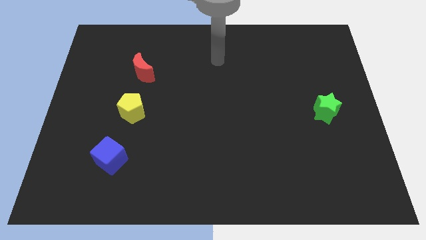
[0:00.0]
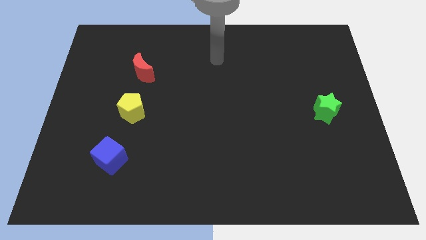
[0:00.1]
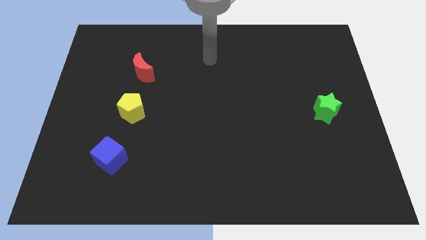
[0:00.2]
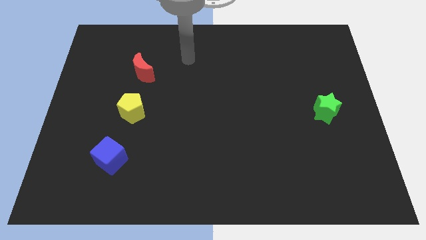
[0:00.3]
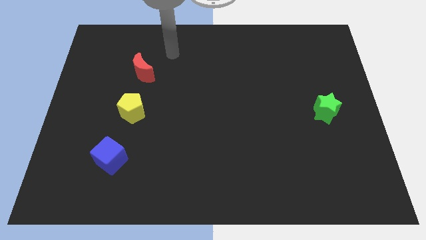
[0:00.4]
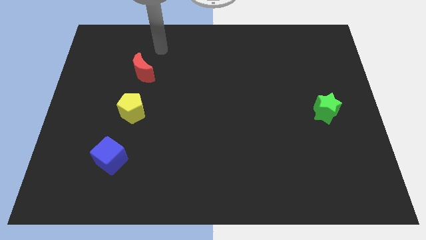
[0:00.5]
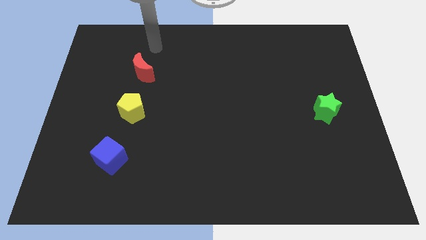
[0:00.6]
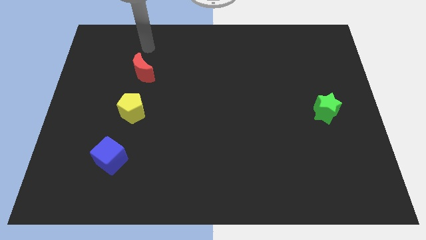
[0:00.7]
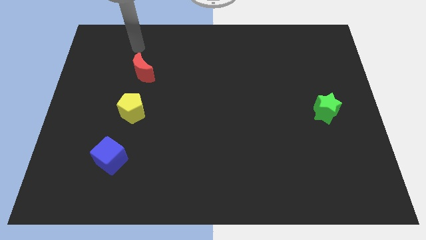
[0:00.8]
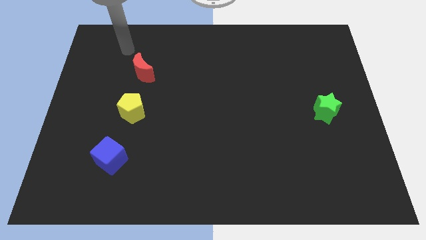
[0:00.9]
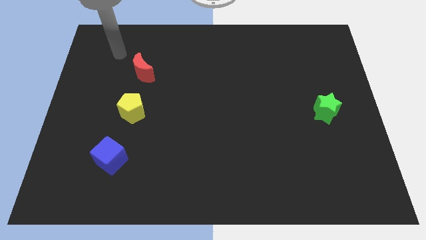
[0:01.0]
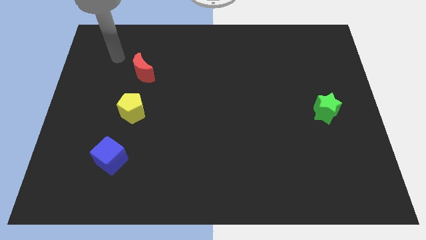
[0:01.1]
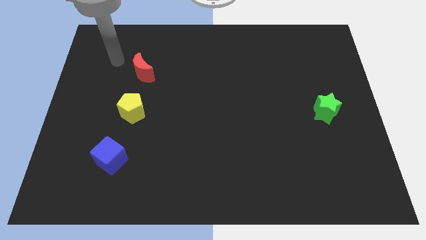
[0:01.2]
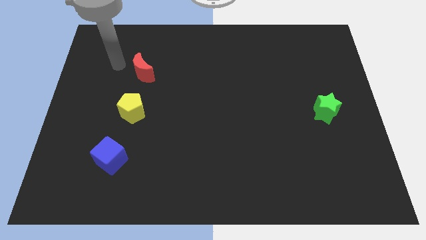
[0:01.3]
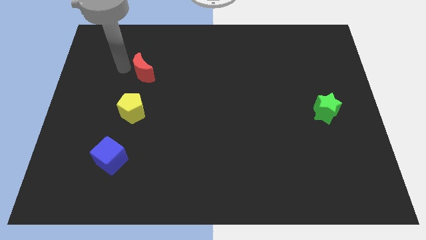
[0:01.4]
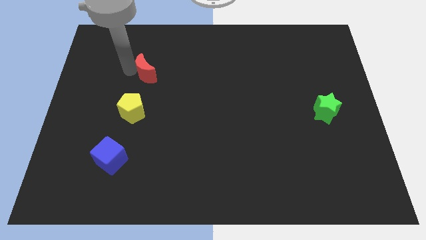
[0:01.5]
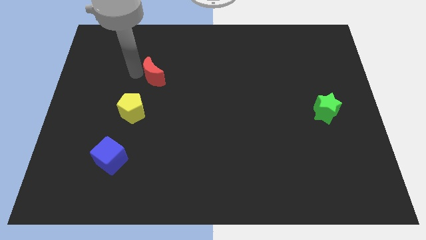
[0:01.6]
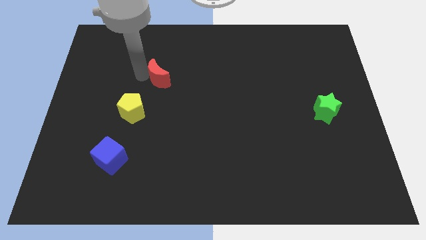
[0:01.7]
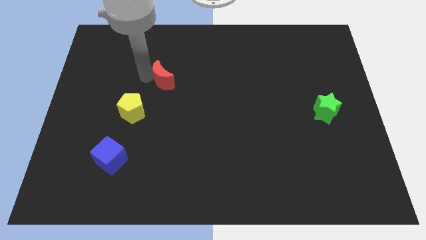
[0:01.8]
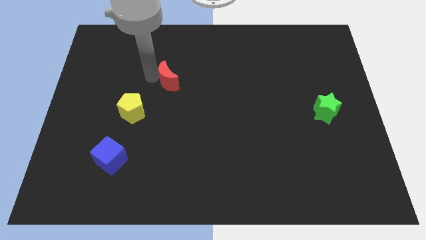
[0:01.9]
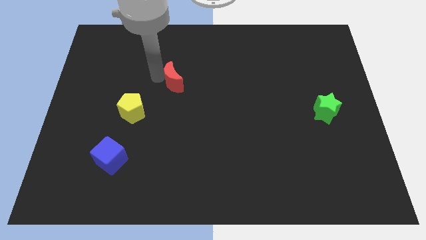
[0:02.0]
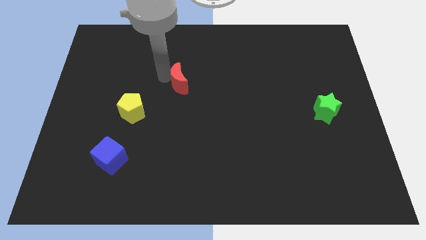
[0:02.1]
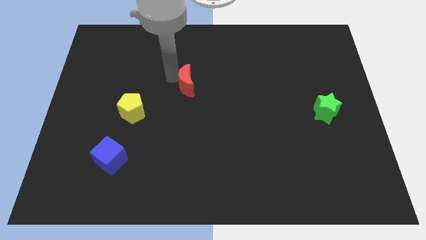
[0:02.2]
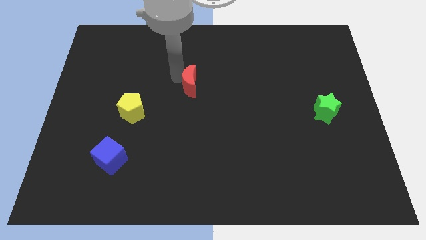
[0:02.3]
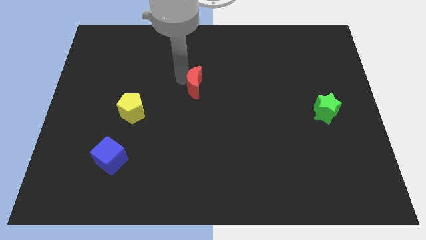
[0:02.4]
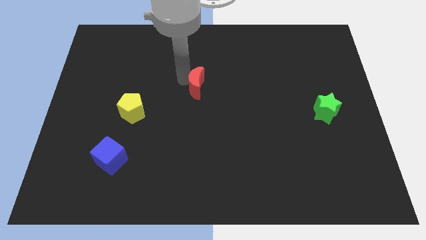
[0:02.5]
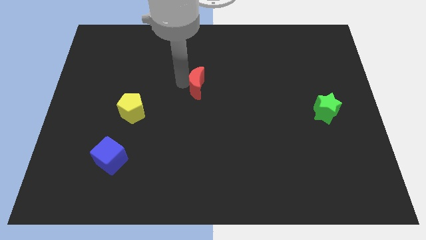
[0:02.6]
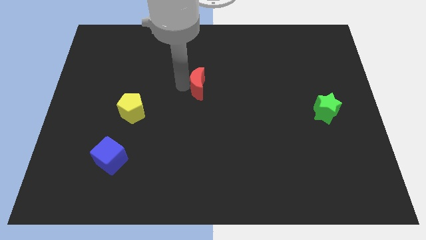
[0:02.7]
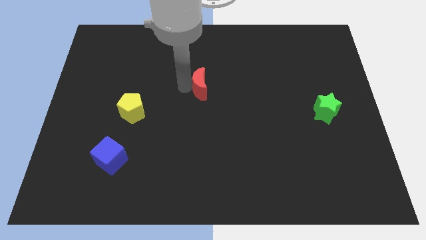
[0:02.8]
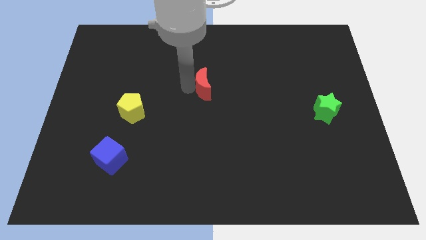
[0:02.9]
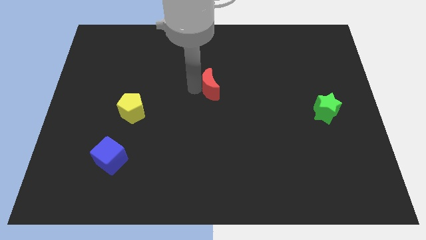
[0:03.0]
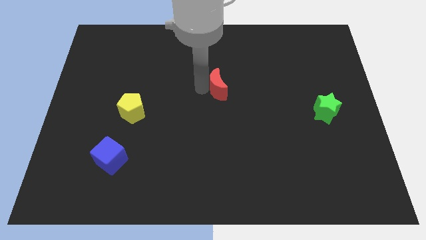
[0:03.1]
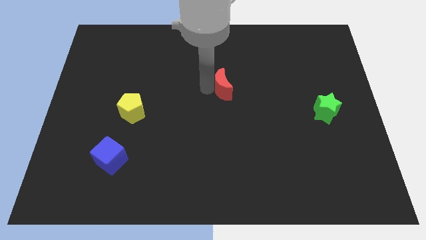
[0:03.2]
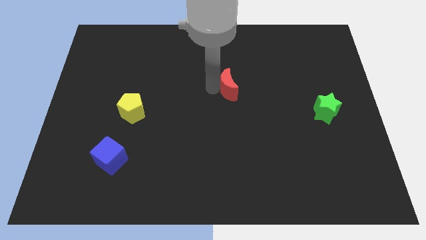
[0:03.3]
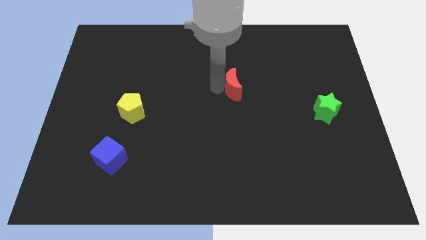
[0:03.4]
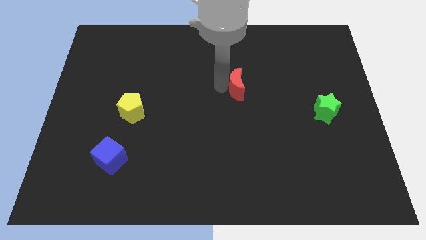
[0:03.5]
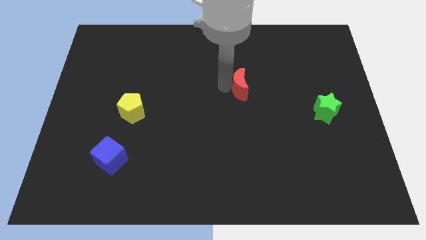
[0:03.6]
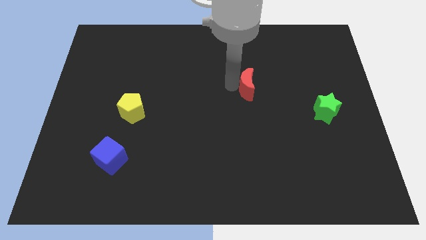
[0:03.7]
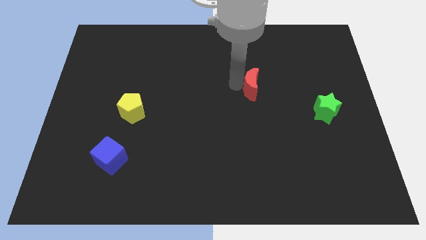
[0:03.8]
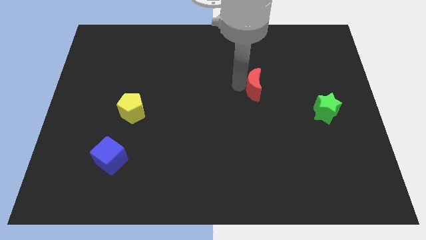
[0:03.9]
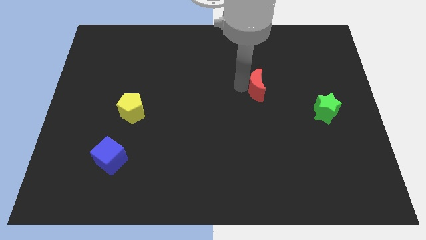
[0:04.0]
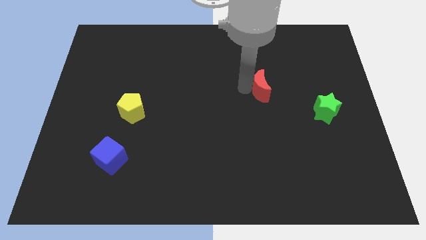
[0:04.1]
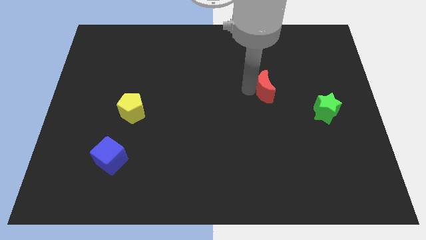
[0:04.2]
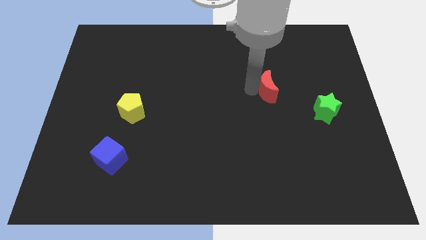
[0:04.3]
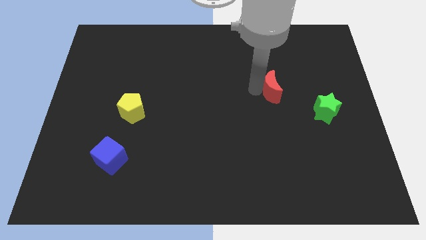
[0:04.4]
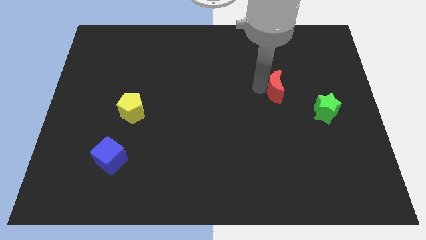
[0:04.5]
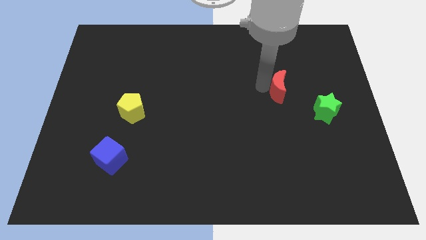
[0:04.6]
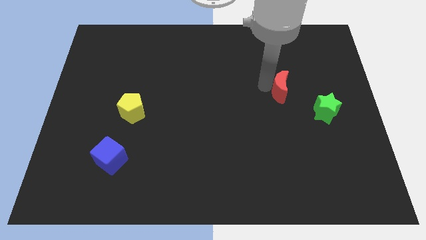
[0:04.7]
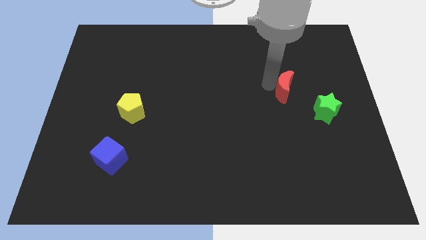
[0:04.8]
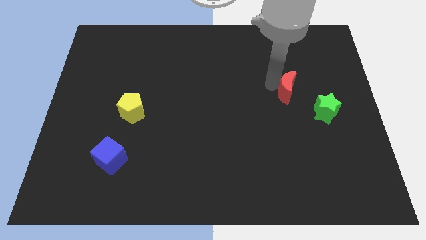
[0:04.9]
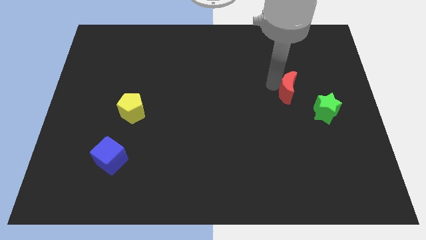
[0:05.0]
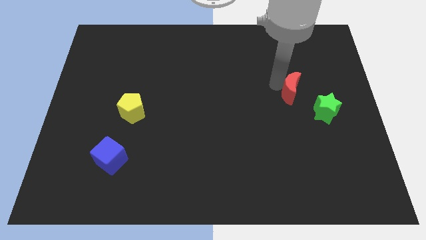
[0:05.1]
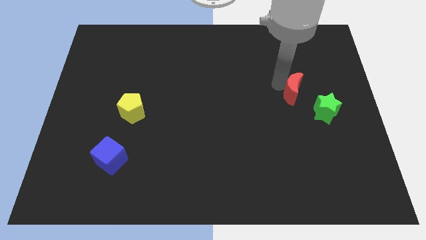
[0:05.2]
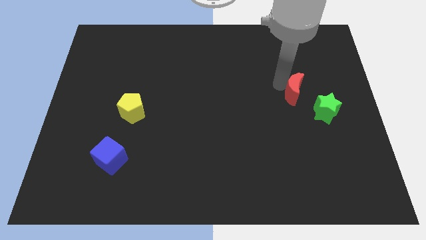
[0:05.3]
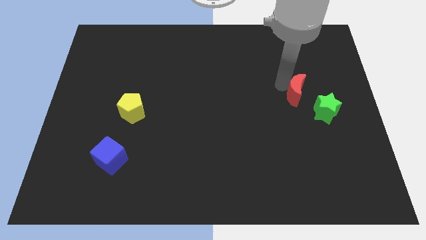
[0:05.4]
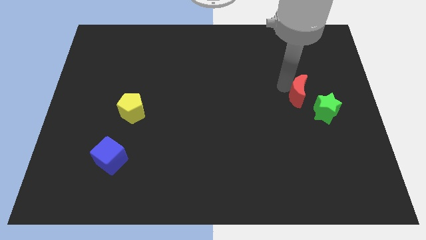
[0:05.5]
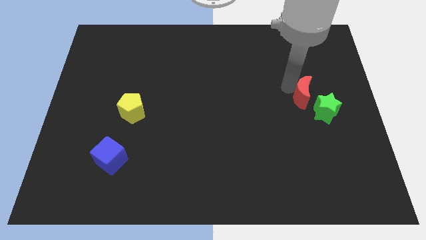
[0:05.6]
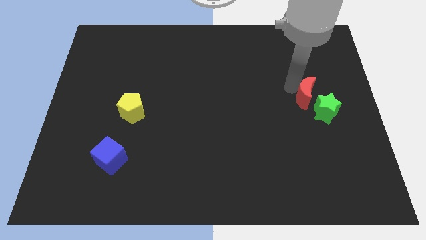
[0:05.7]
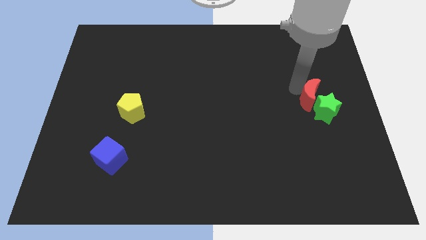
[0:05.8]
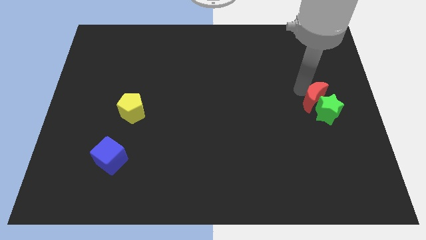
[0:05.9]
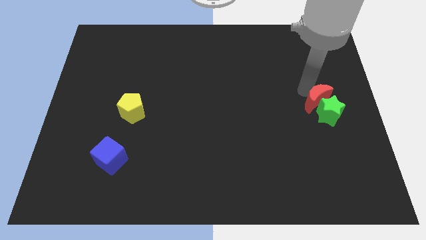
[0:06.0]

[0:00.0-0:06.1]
push the red block close to the green star

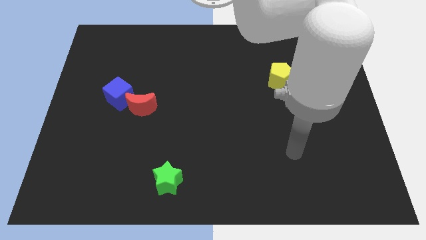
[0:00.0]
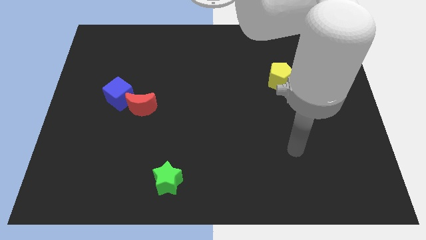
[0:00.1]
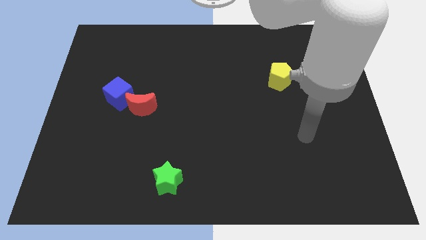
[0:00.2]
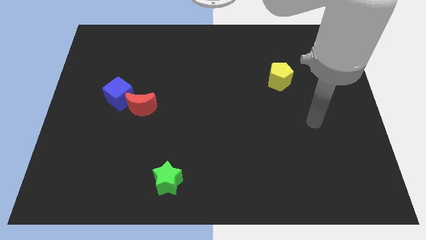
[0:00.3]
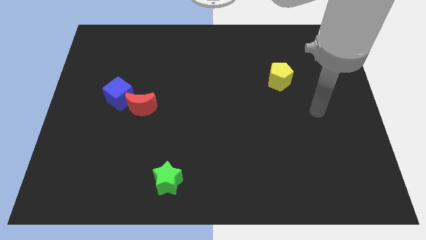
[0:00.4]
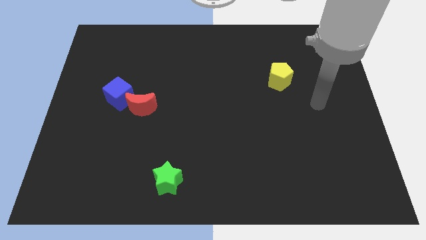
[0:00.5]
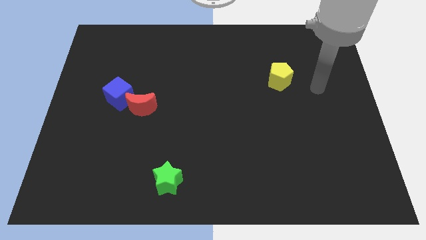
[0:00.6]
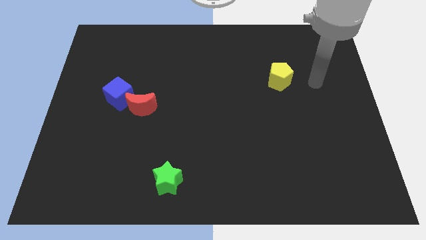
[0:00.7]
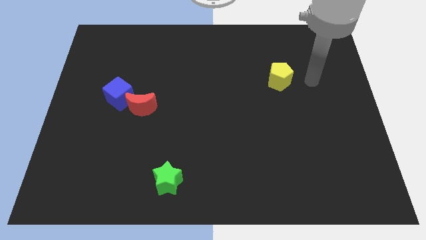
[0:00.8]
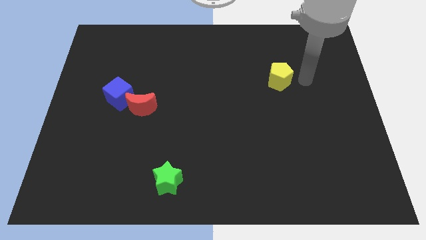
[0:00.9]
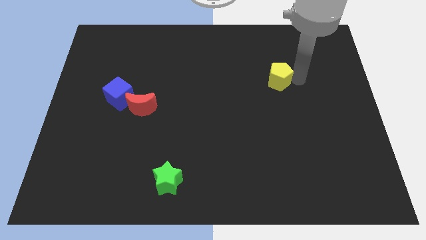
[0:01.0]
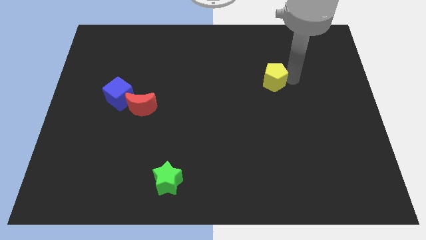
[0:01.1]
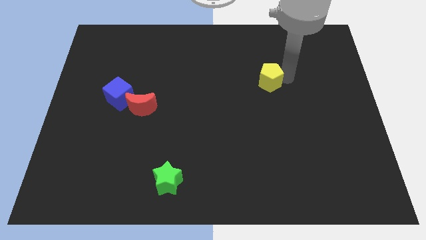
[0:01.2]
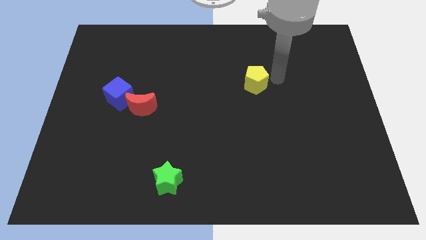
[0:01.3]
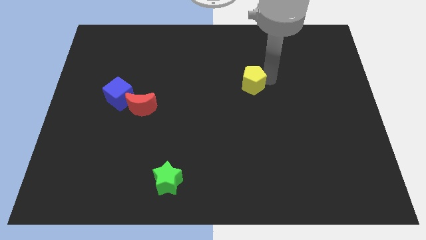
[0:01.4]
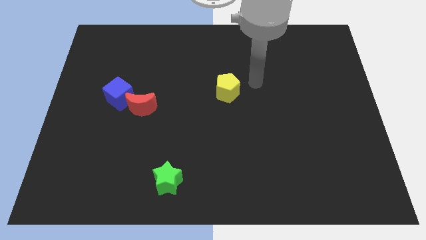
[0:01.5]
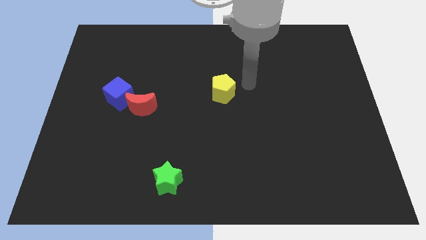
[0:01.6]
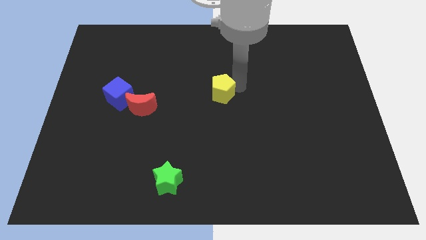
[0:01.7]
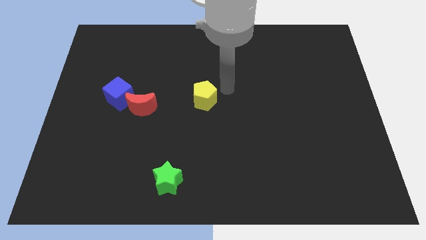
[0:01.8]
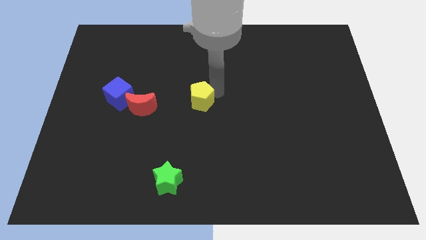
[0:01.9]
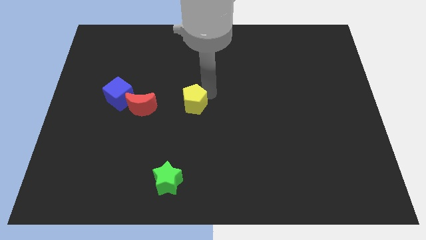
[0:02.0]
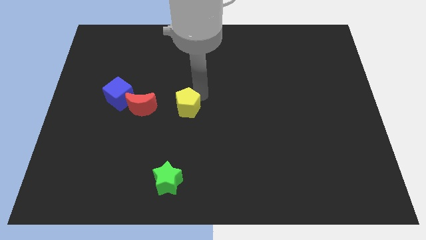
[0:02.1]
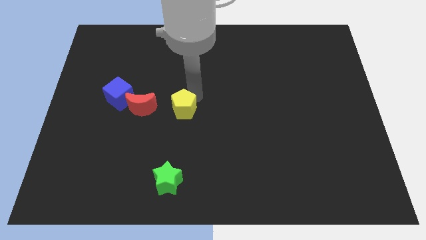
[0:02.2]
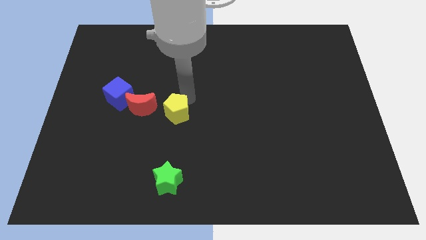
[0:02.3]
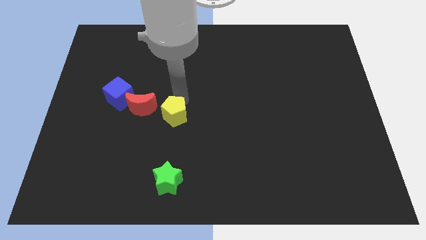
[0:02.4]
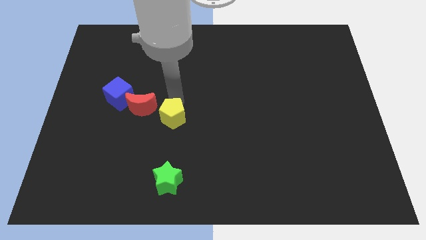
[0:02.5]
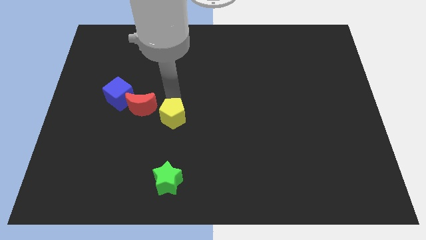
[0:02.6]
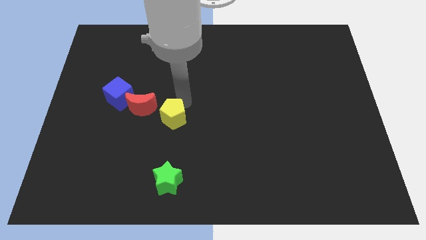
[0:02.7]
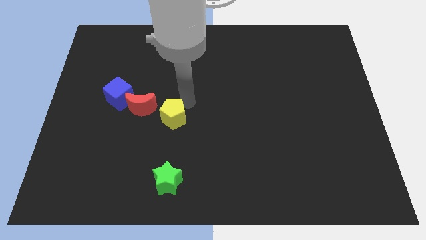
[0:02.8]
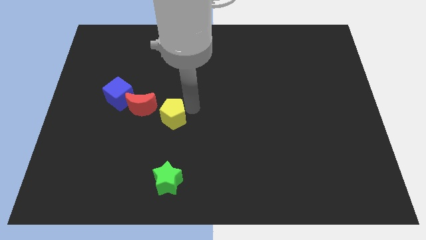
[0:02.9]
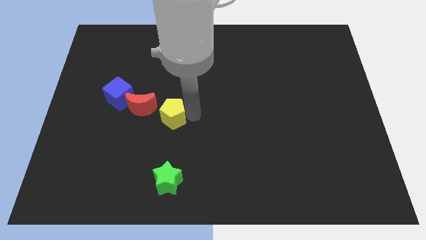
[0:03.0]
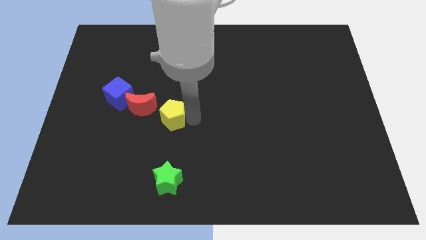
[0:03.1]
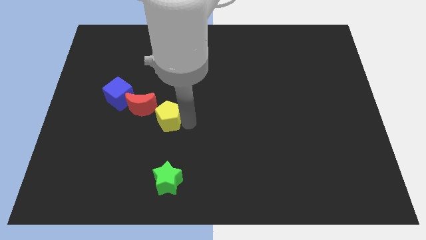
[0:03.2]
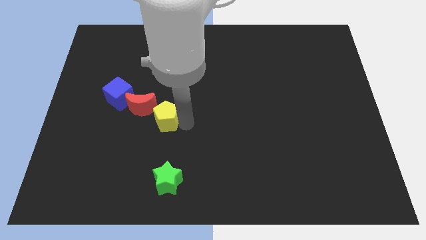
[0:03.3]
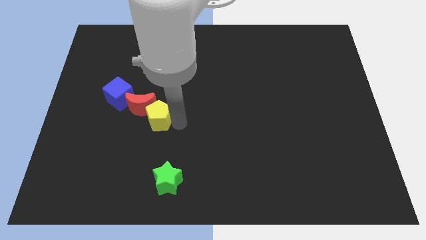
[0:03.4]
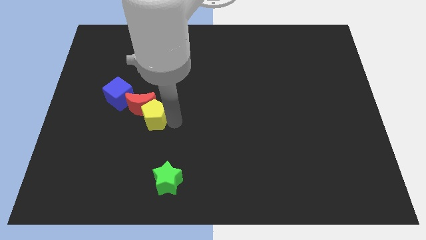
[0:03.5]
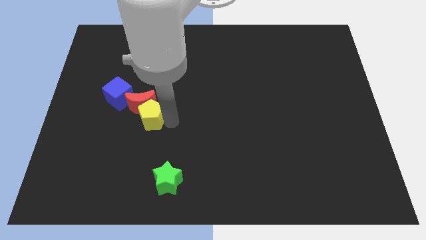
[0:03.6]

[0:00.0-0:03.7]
slide the pentagon close to the red moon
